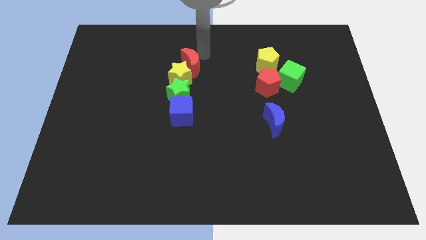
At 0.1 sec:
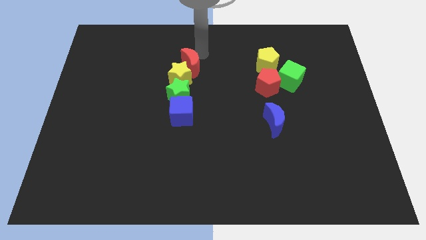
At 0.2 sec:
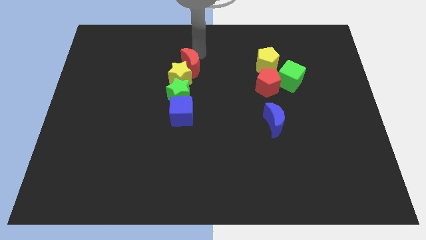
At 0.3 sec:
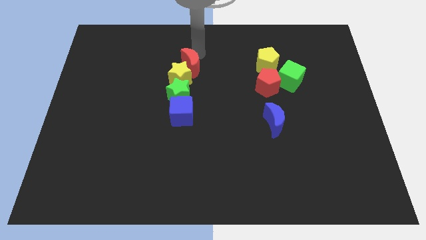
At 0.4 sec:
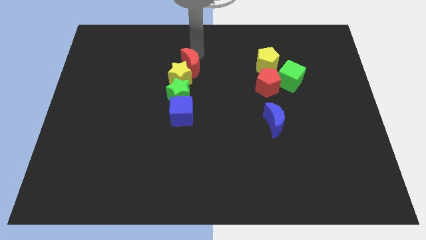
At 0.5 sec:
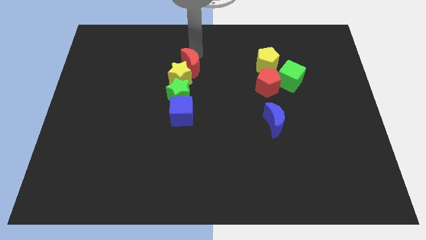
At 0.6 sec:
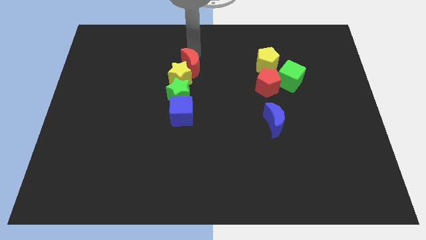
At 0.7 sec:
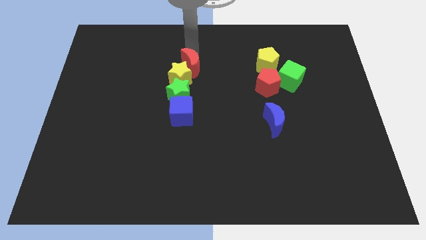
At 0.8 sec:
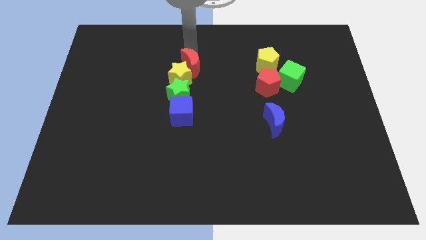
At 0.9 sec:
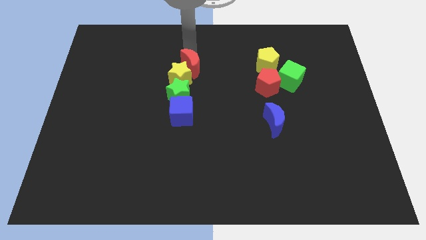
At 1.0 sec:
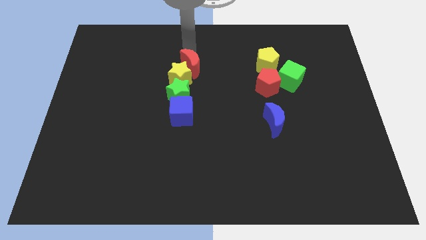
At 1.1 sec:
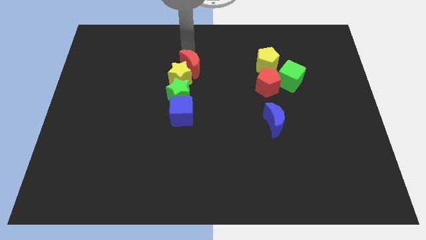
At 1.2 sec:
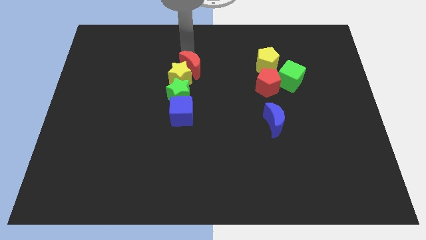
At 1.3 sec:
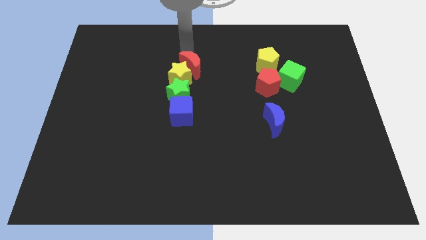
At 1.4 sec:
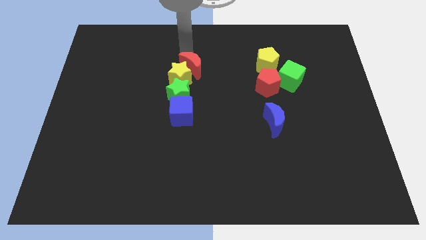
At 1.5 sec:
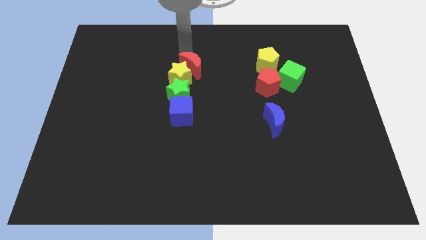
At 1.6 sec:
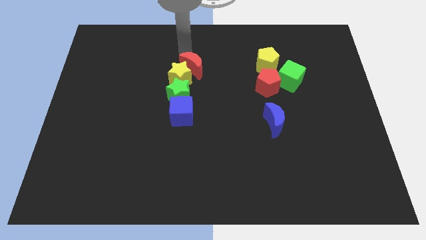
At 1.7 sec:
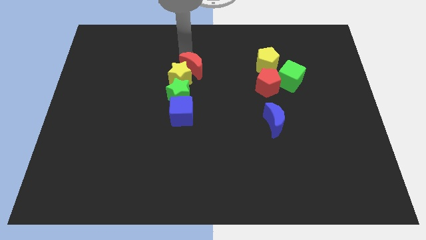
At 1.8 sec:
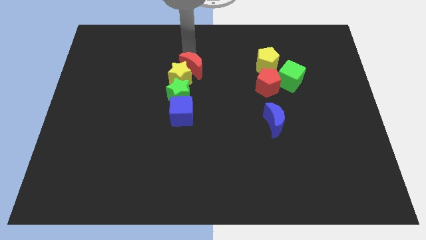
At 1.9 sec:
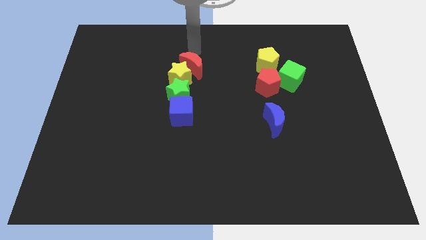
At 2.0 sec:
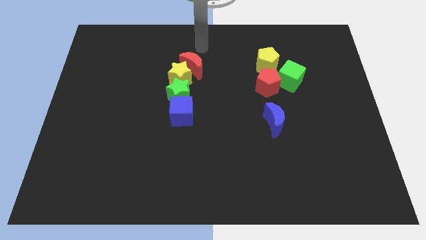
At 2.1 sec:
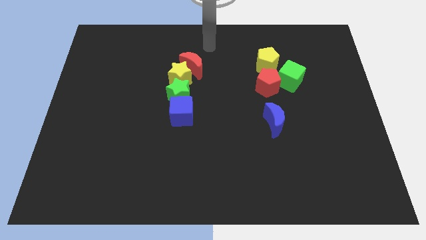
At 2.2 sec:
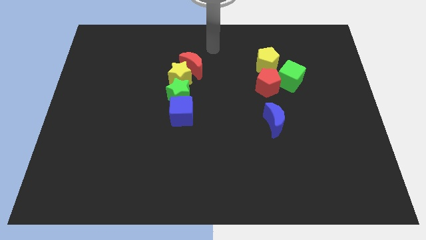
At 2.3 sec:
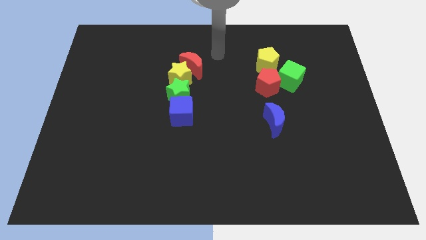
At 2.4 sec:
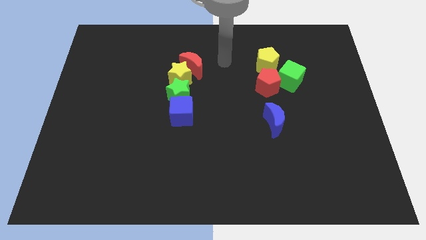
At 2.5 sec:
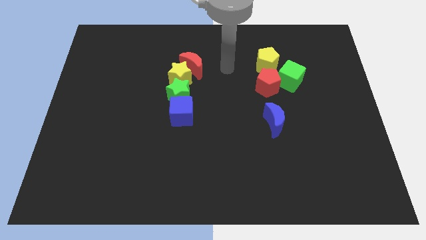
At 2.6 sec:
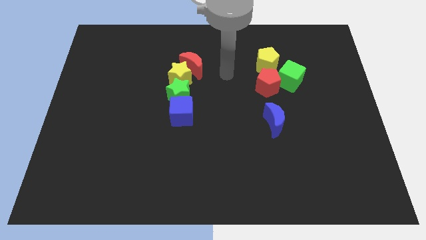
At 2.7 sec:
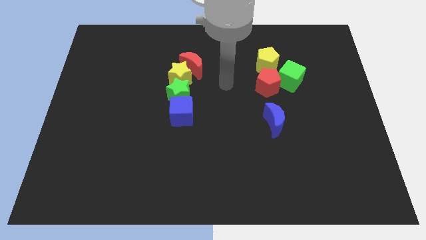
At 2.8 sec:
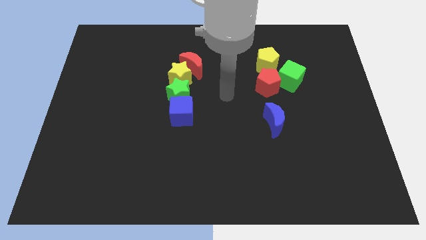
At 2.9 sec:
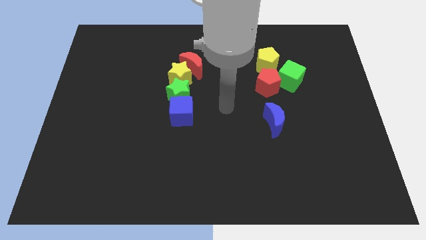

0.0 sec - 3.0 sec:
move the arm towards the centre of the board

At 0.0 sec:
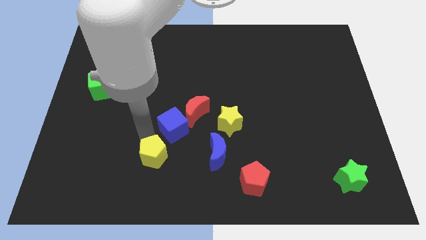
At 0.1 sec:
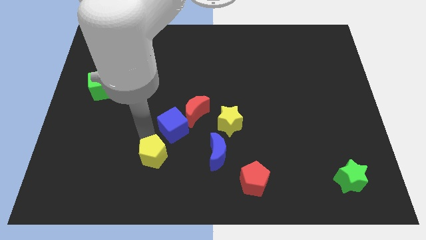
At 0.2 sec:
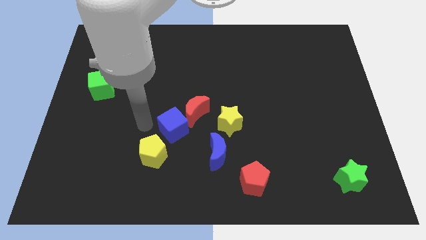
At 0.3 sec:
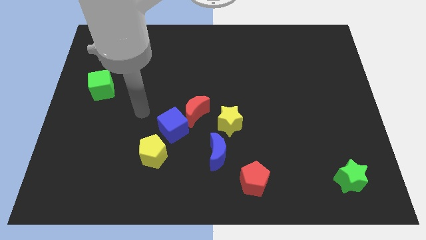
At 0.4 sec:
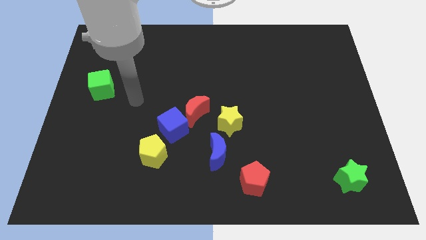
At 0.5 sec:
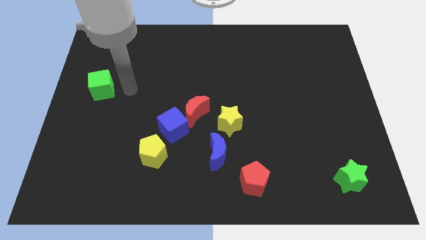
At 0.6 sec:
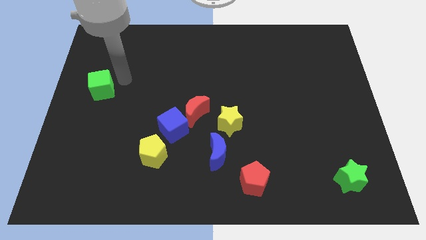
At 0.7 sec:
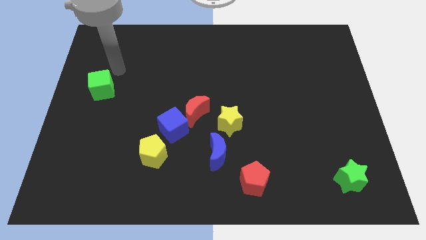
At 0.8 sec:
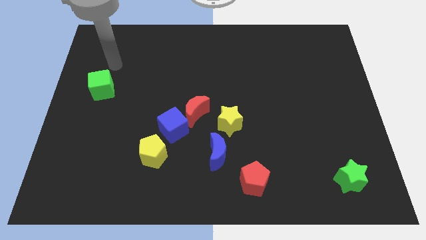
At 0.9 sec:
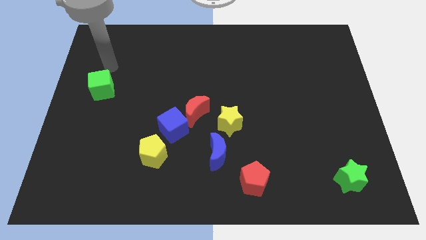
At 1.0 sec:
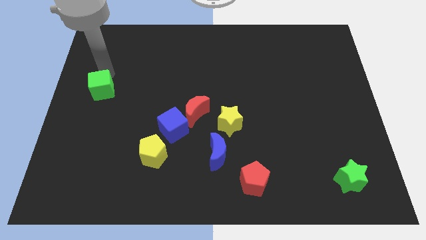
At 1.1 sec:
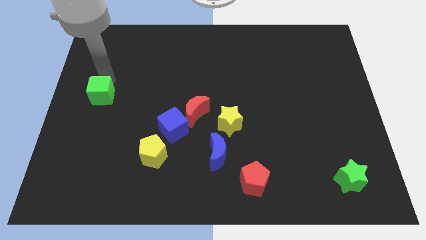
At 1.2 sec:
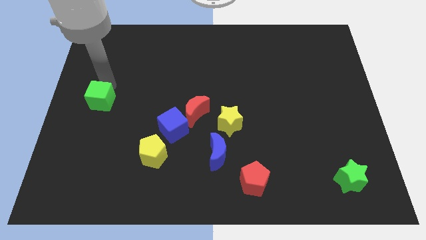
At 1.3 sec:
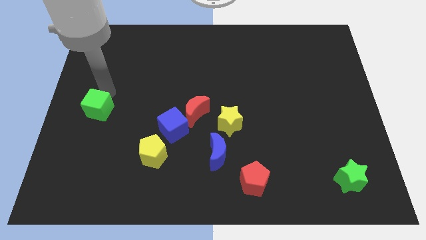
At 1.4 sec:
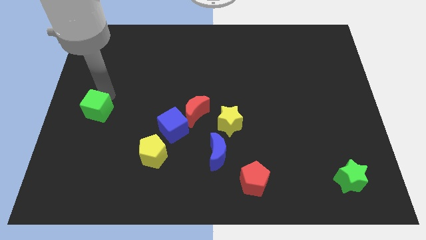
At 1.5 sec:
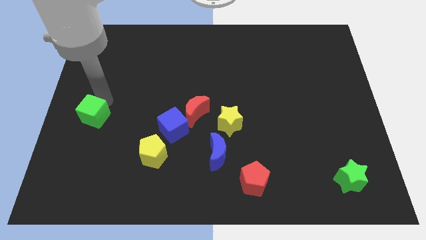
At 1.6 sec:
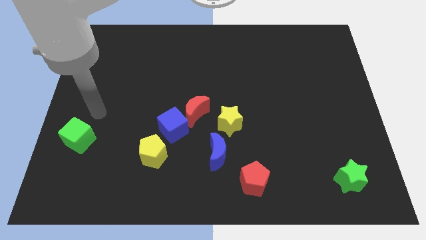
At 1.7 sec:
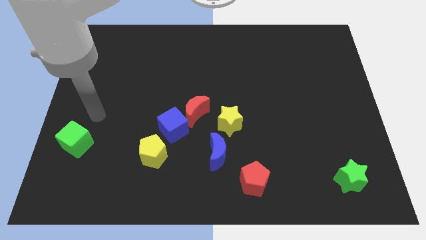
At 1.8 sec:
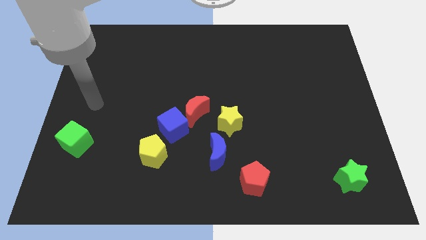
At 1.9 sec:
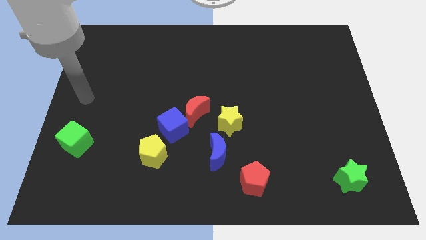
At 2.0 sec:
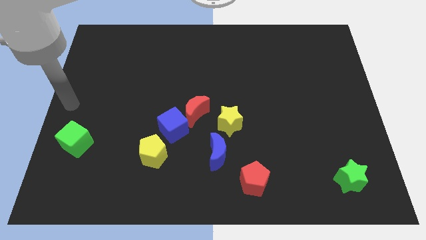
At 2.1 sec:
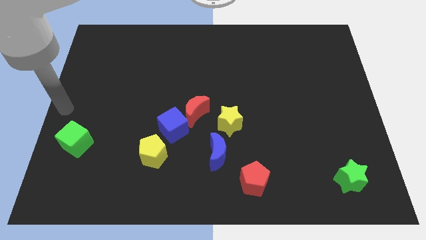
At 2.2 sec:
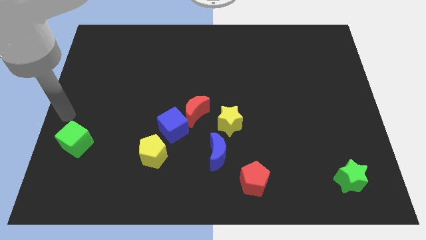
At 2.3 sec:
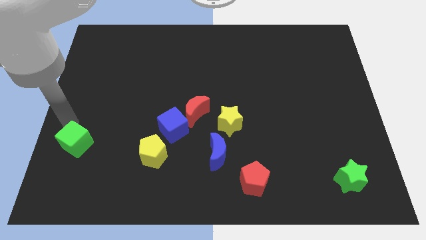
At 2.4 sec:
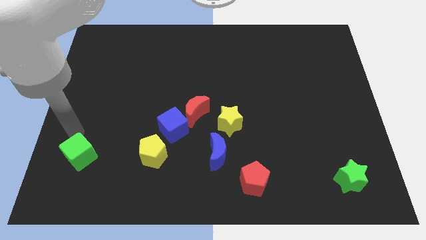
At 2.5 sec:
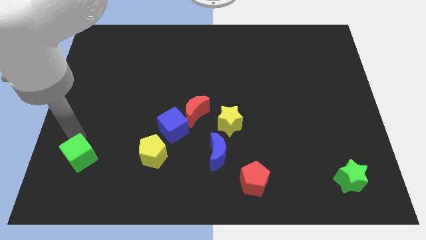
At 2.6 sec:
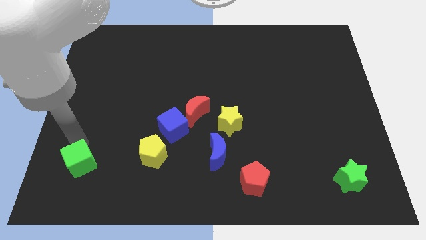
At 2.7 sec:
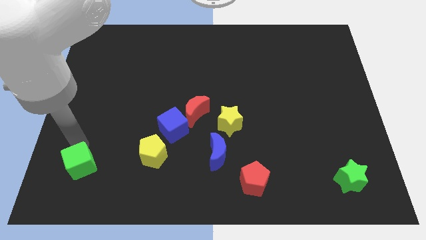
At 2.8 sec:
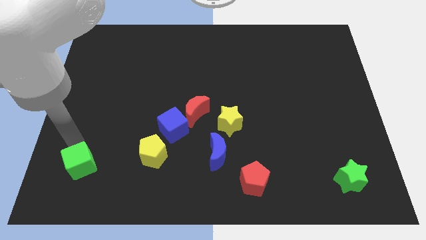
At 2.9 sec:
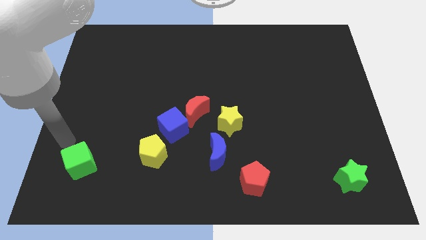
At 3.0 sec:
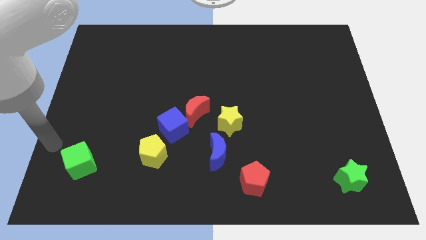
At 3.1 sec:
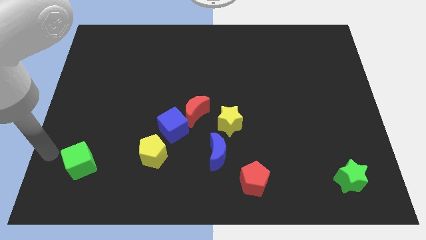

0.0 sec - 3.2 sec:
move the green cube downwards

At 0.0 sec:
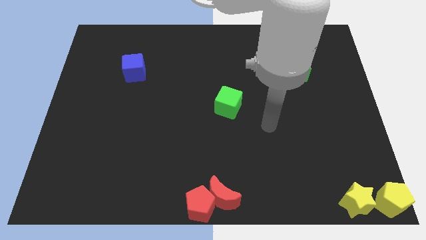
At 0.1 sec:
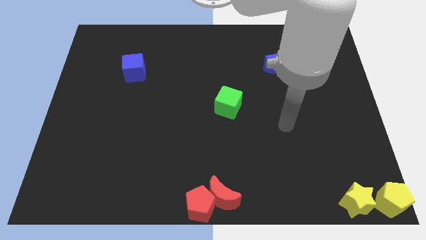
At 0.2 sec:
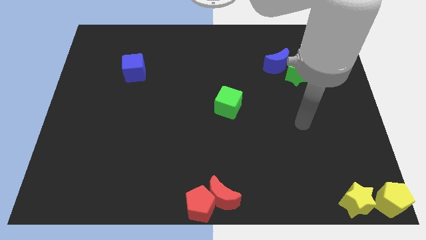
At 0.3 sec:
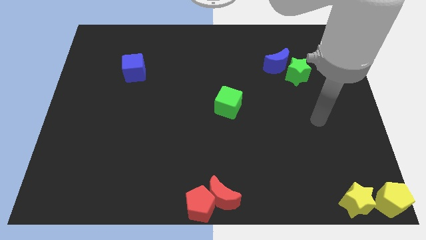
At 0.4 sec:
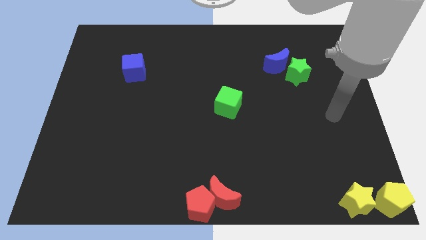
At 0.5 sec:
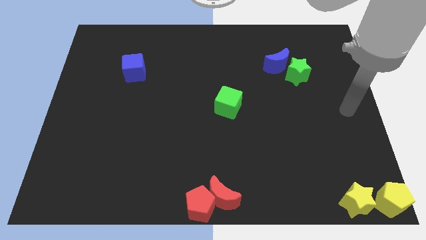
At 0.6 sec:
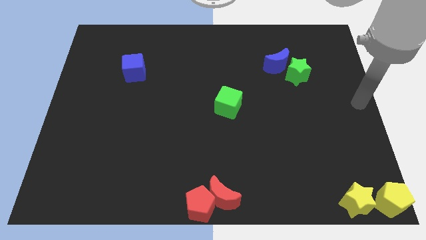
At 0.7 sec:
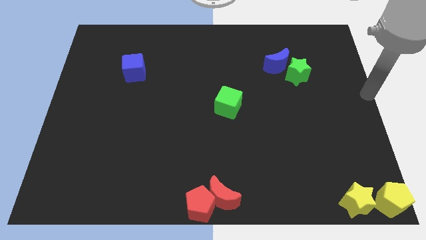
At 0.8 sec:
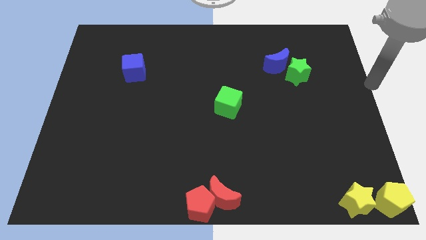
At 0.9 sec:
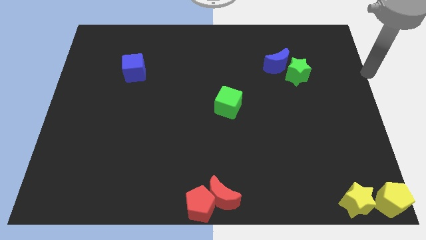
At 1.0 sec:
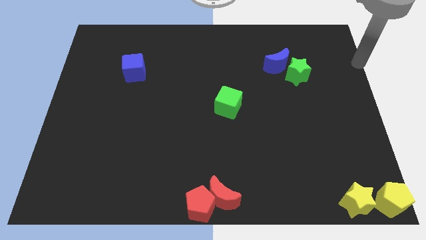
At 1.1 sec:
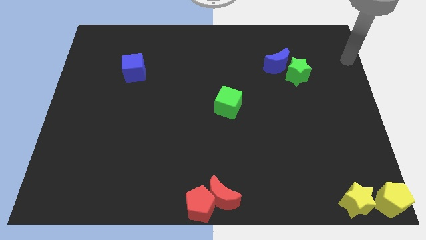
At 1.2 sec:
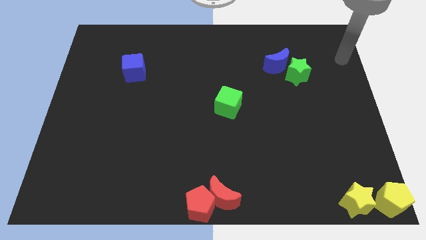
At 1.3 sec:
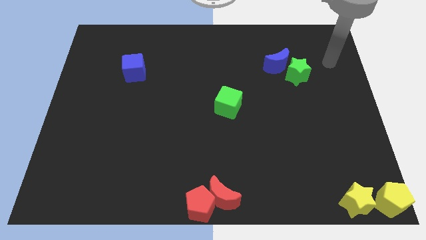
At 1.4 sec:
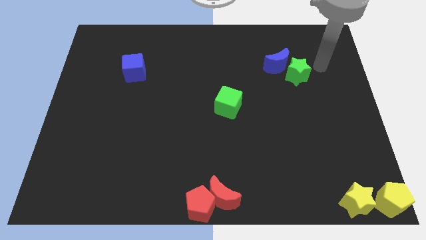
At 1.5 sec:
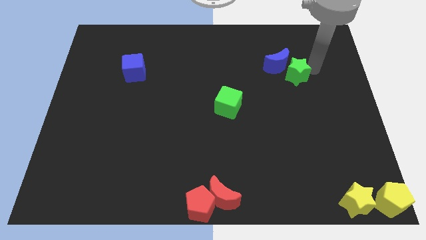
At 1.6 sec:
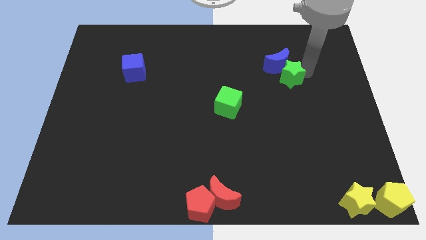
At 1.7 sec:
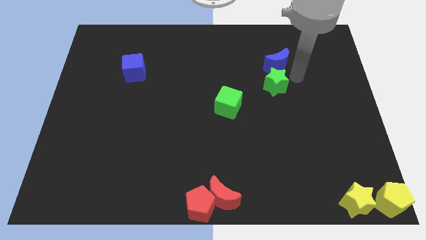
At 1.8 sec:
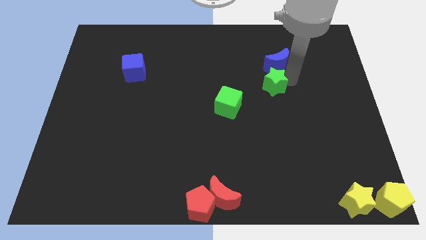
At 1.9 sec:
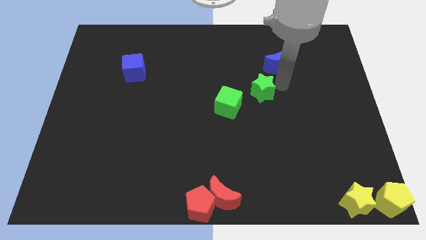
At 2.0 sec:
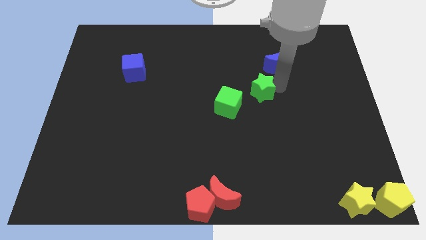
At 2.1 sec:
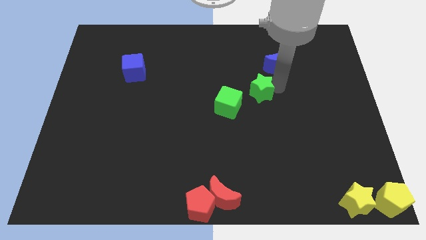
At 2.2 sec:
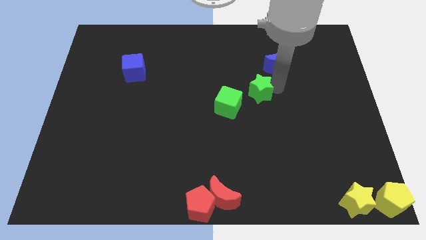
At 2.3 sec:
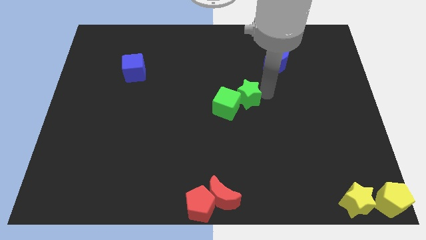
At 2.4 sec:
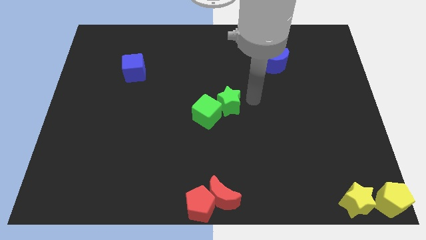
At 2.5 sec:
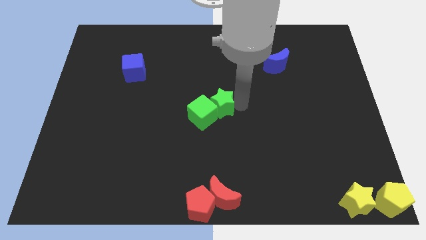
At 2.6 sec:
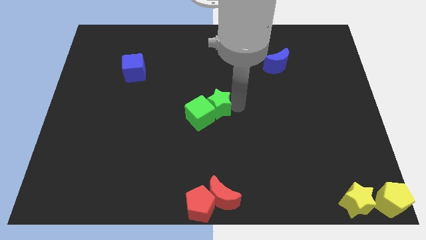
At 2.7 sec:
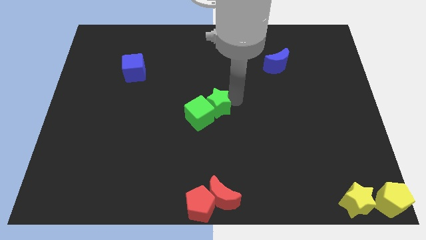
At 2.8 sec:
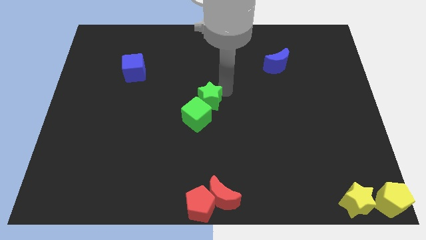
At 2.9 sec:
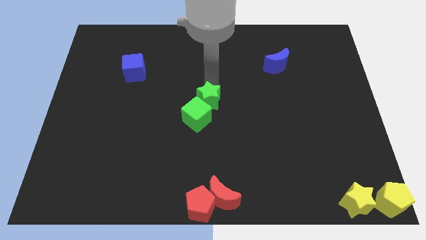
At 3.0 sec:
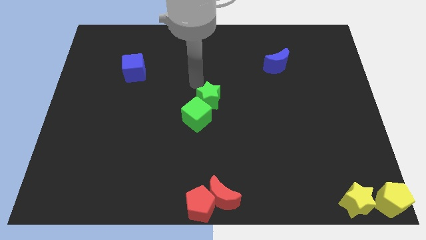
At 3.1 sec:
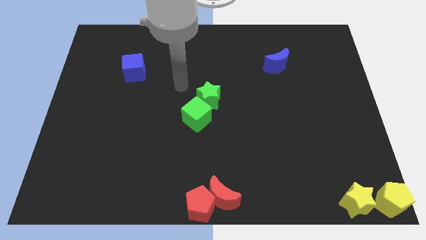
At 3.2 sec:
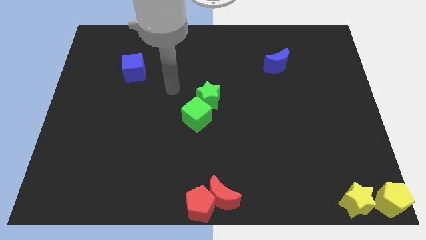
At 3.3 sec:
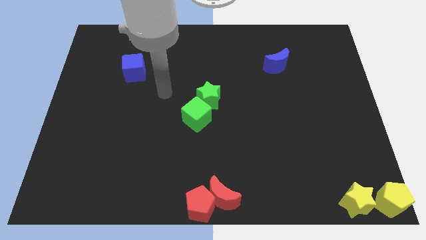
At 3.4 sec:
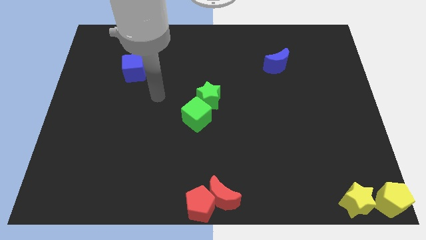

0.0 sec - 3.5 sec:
push the green star into the green cube
